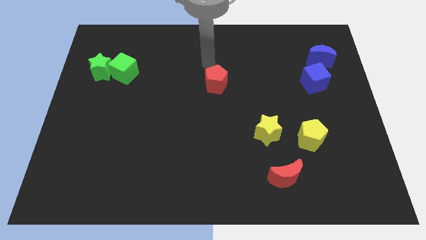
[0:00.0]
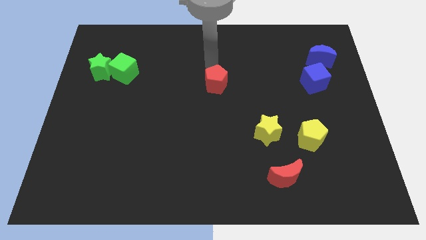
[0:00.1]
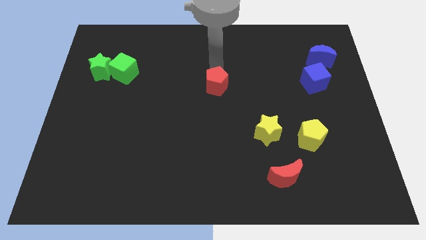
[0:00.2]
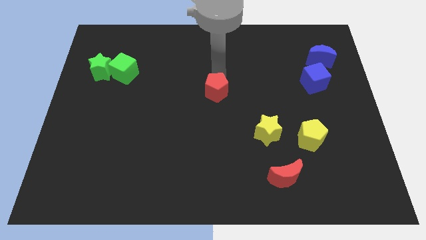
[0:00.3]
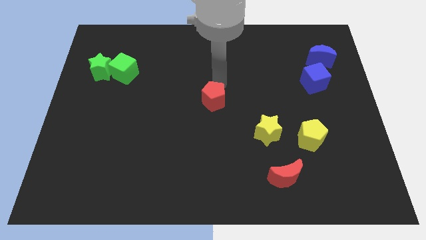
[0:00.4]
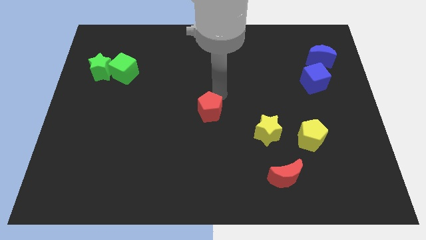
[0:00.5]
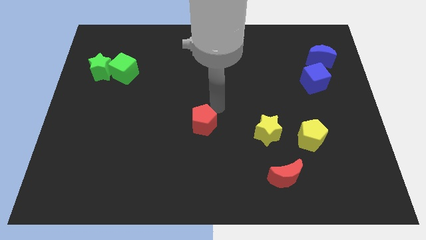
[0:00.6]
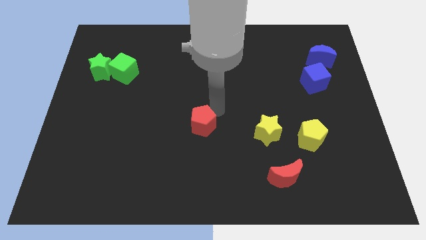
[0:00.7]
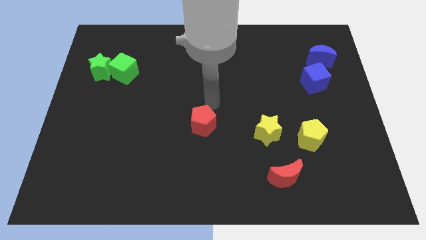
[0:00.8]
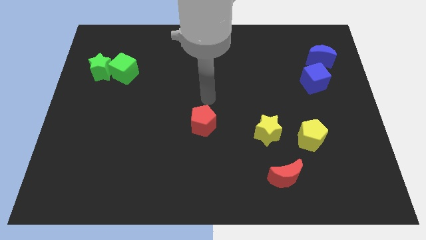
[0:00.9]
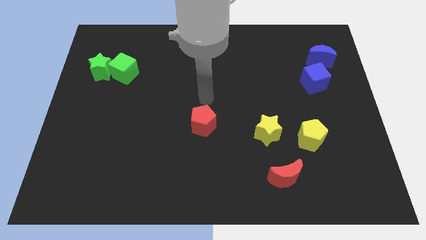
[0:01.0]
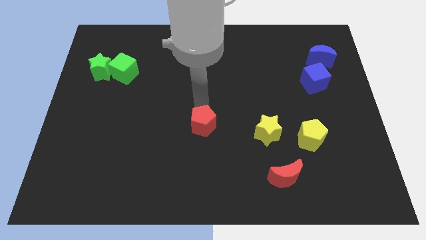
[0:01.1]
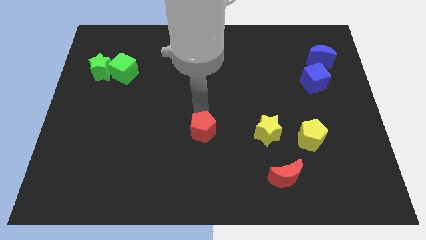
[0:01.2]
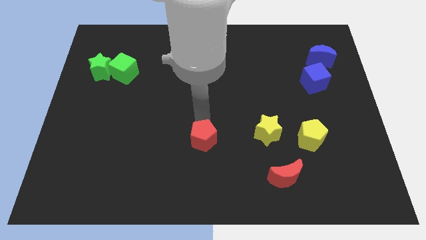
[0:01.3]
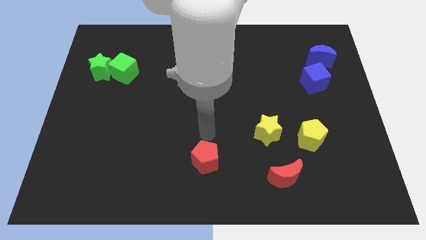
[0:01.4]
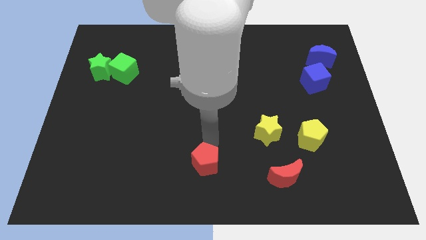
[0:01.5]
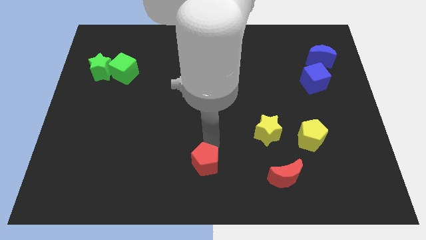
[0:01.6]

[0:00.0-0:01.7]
push the red pentagon to the bottom center

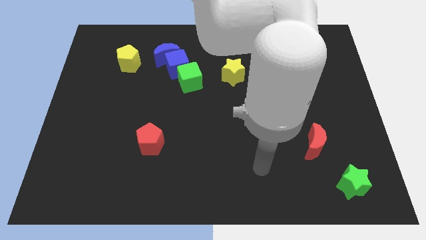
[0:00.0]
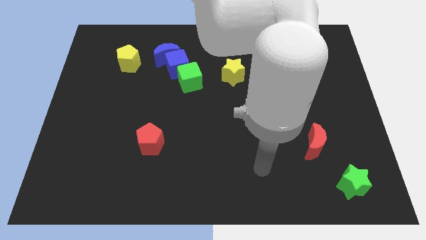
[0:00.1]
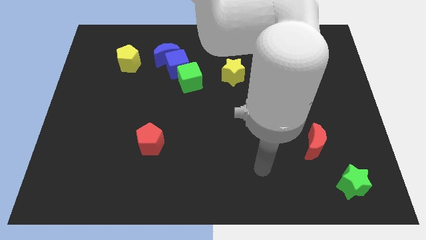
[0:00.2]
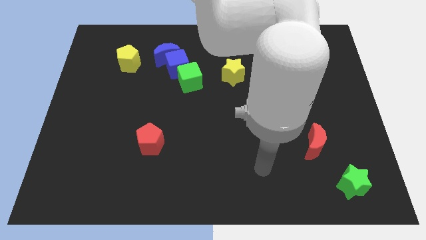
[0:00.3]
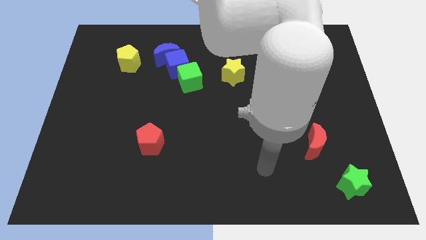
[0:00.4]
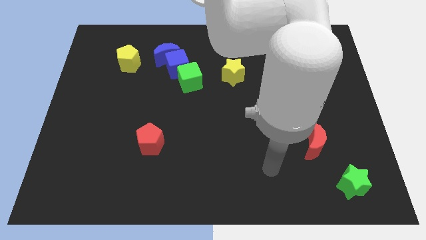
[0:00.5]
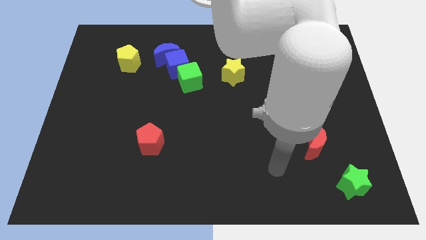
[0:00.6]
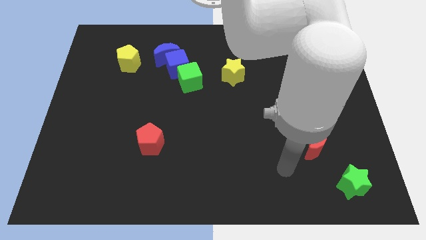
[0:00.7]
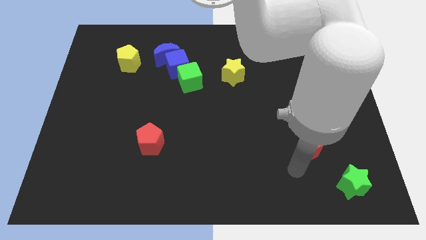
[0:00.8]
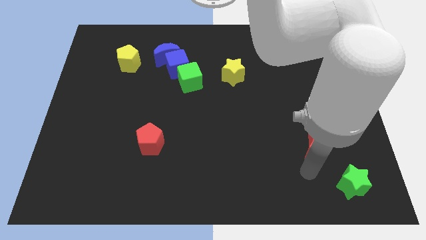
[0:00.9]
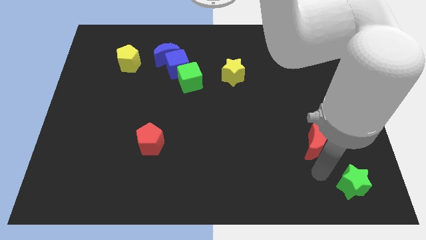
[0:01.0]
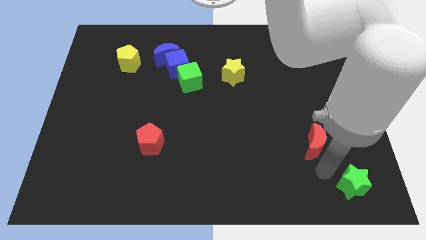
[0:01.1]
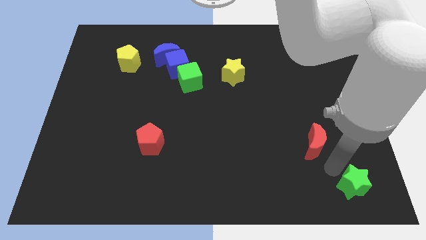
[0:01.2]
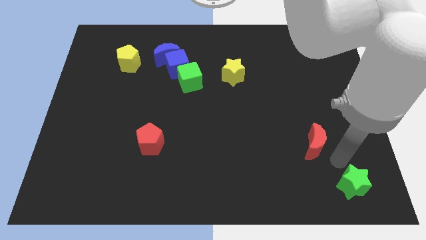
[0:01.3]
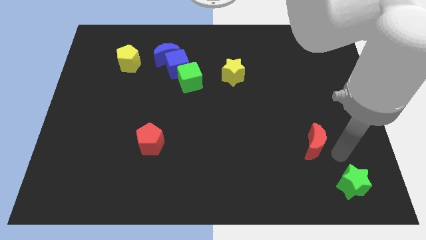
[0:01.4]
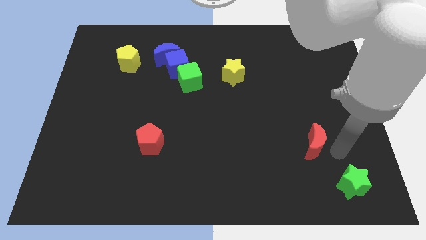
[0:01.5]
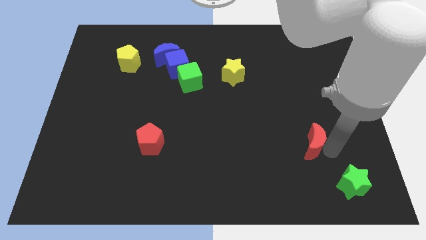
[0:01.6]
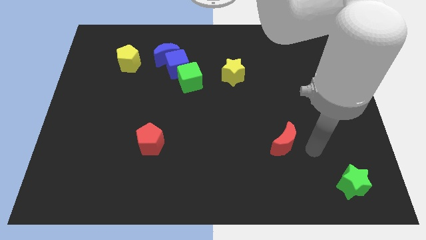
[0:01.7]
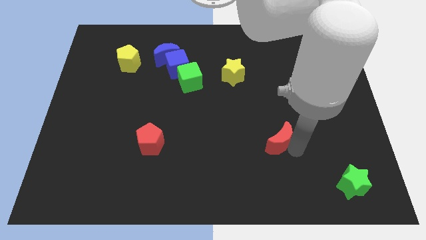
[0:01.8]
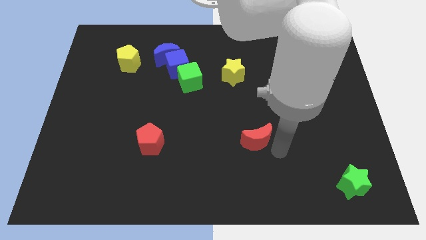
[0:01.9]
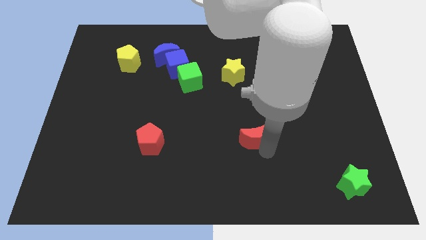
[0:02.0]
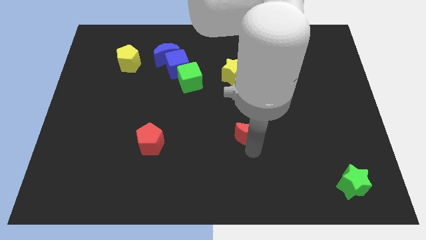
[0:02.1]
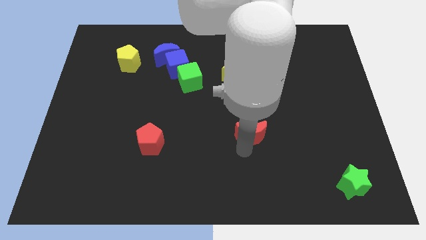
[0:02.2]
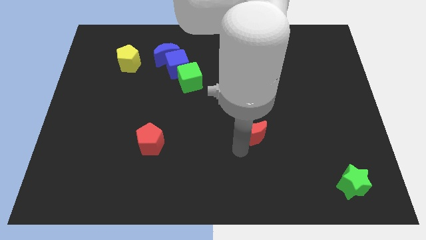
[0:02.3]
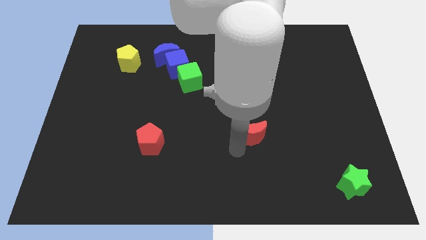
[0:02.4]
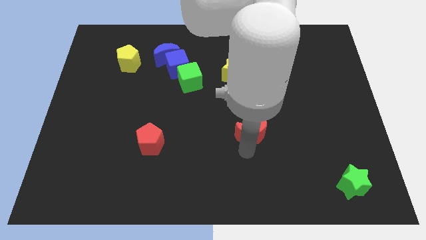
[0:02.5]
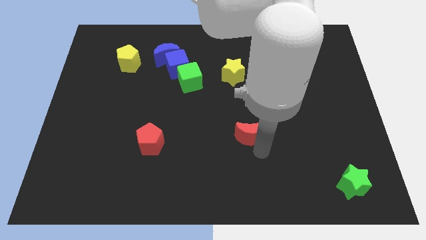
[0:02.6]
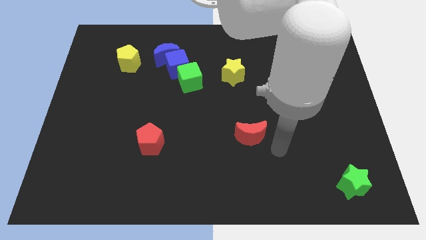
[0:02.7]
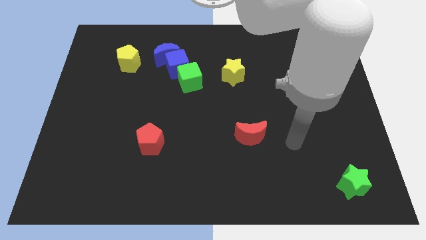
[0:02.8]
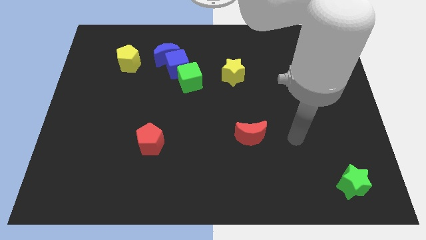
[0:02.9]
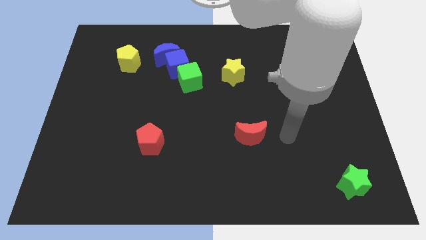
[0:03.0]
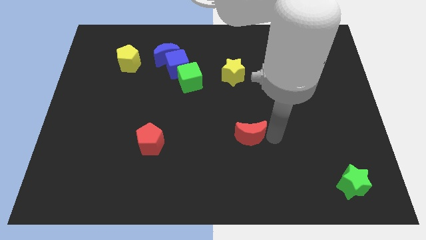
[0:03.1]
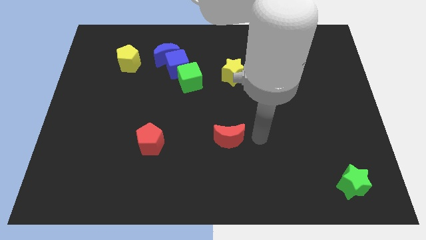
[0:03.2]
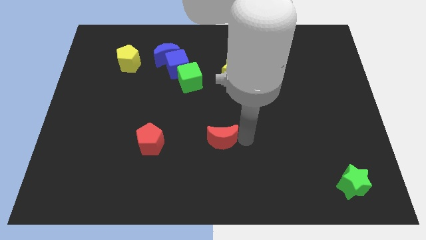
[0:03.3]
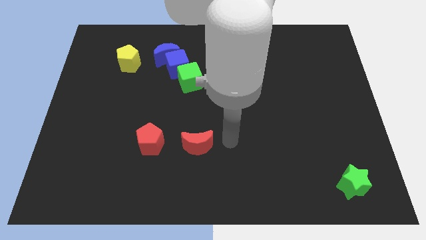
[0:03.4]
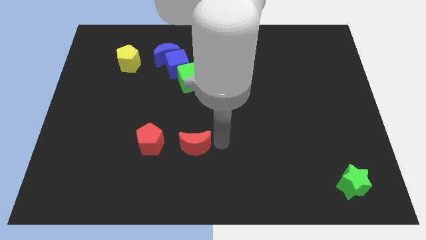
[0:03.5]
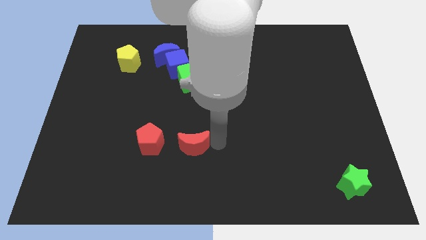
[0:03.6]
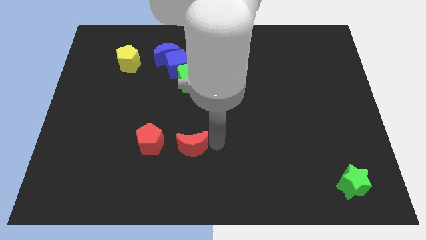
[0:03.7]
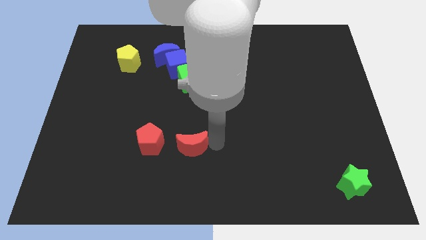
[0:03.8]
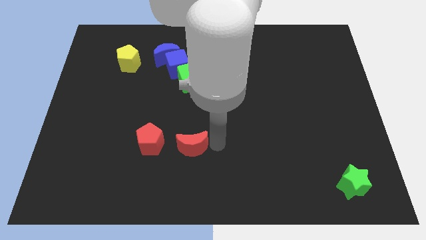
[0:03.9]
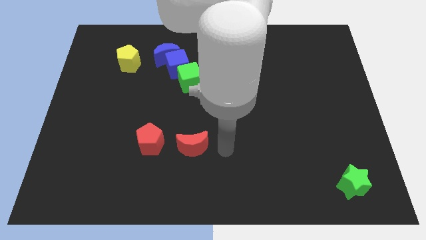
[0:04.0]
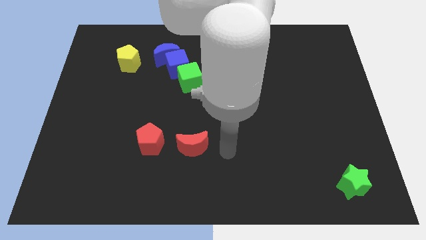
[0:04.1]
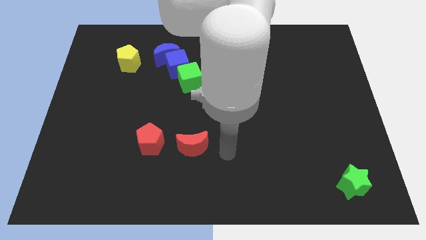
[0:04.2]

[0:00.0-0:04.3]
move the red moon near to the red pentagon

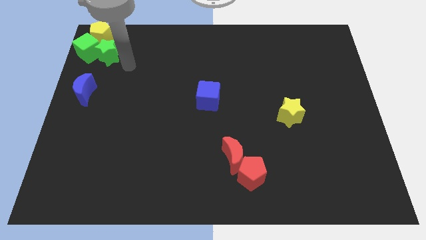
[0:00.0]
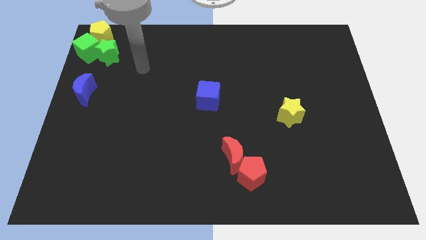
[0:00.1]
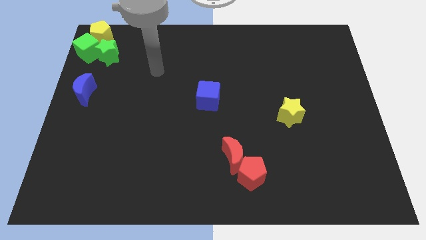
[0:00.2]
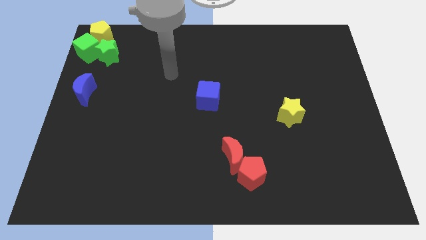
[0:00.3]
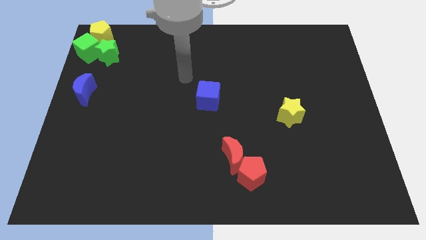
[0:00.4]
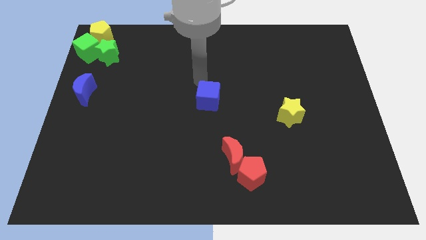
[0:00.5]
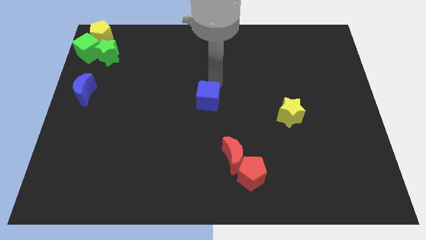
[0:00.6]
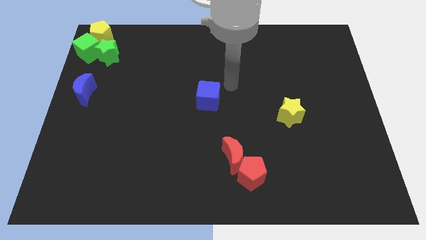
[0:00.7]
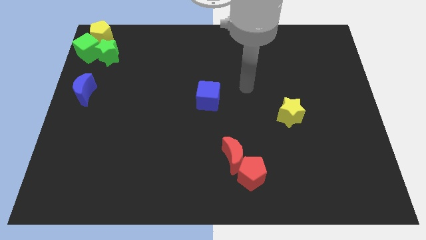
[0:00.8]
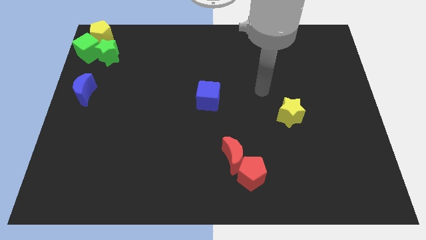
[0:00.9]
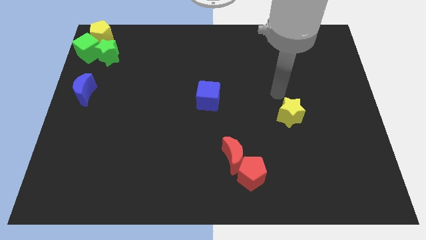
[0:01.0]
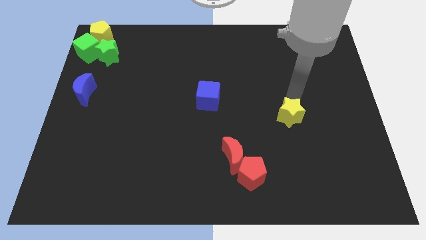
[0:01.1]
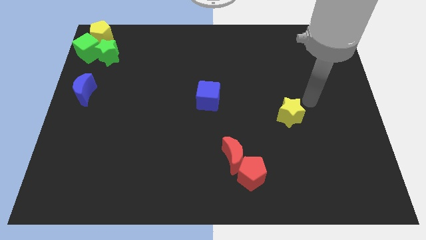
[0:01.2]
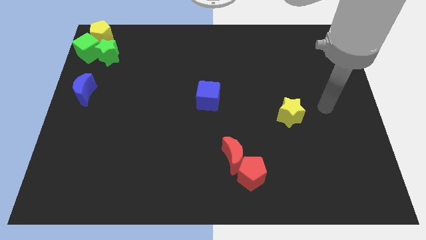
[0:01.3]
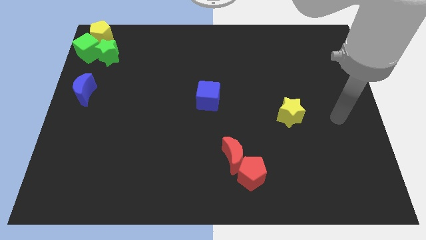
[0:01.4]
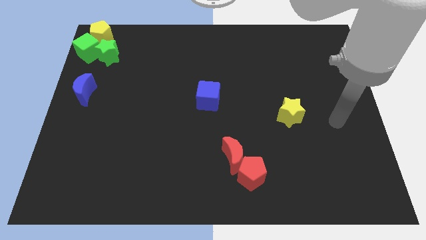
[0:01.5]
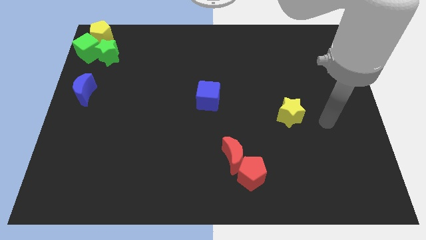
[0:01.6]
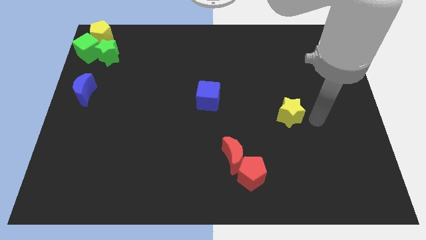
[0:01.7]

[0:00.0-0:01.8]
move yourself away from the green star

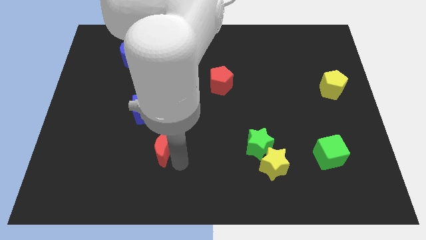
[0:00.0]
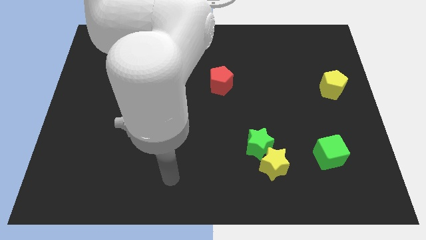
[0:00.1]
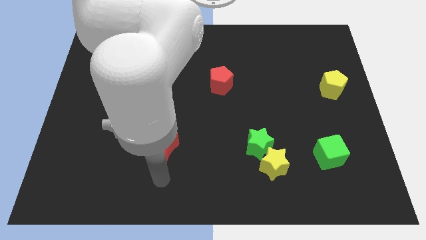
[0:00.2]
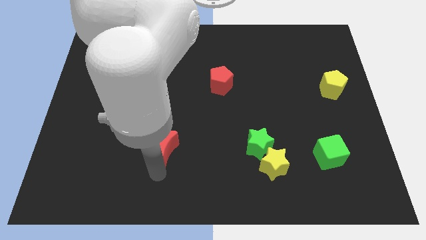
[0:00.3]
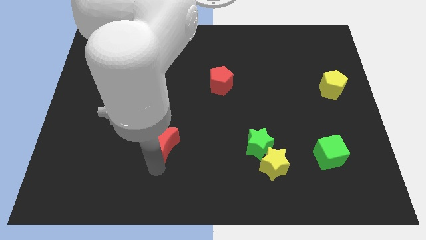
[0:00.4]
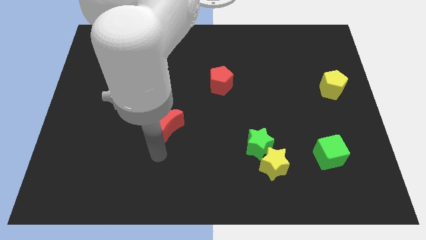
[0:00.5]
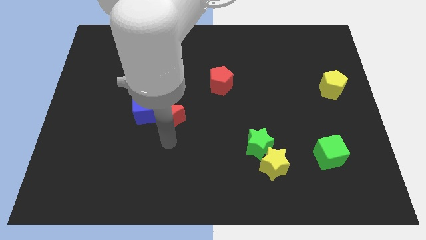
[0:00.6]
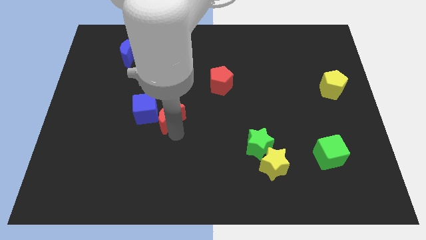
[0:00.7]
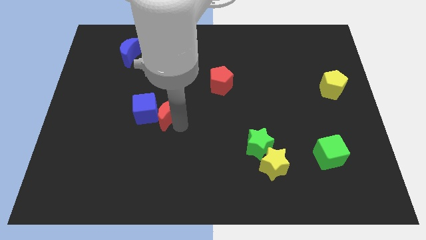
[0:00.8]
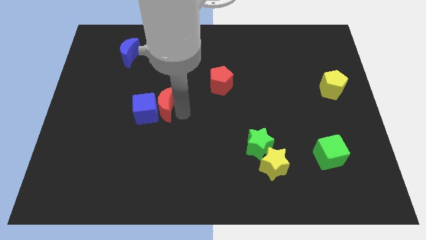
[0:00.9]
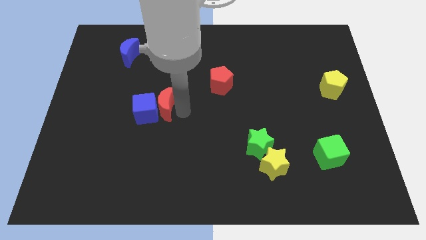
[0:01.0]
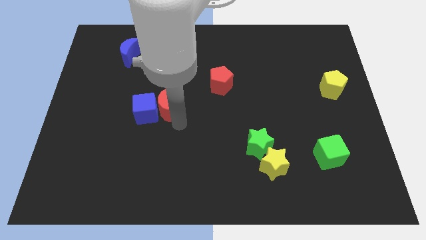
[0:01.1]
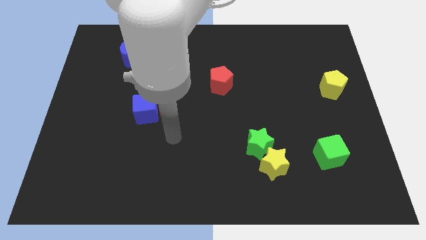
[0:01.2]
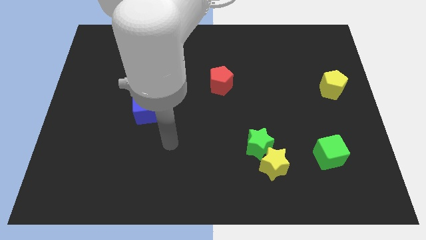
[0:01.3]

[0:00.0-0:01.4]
move the red moon towards the right side of the blue cube
